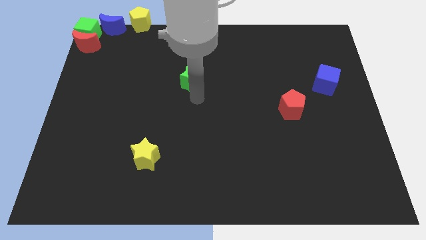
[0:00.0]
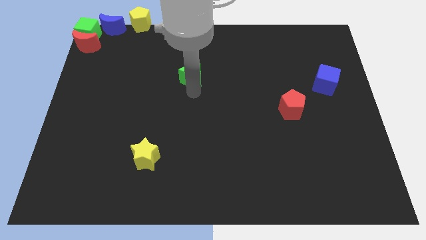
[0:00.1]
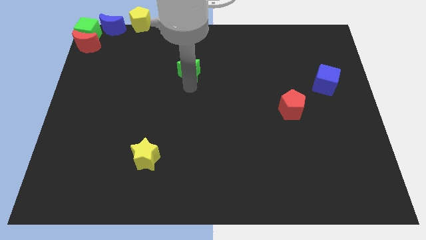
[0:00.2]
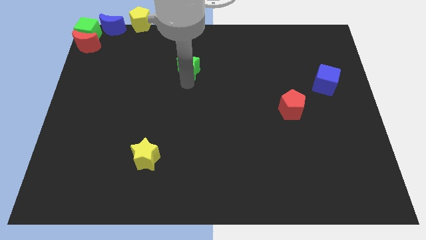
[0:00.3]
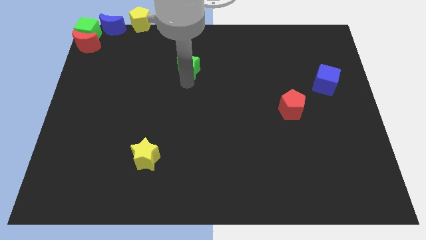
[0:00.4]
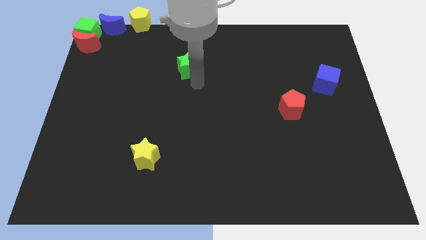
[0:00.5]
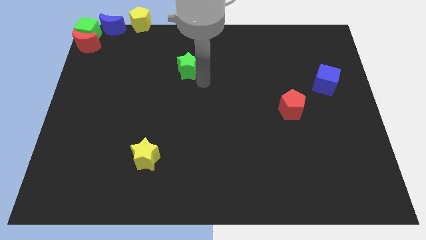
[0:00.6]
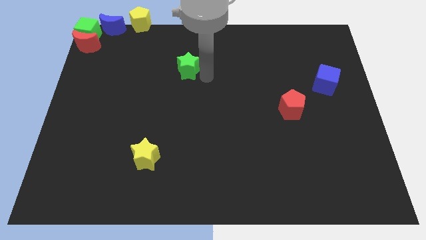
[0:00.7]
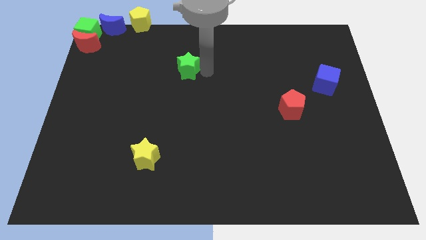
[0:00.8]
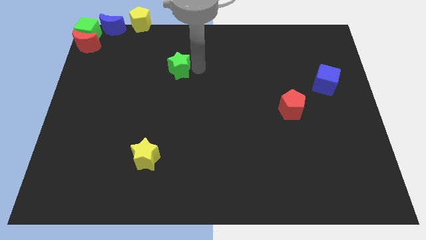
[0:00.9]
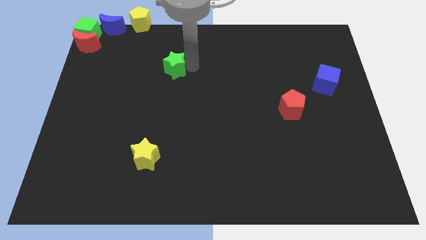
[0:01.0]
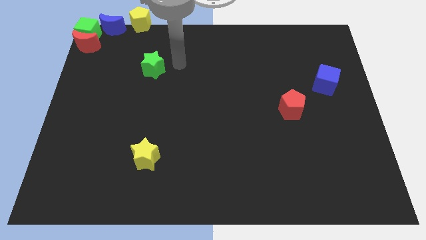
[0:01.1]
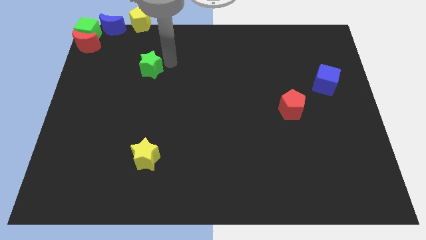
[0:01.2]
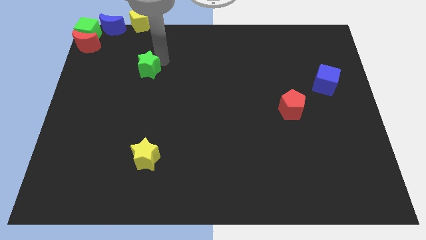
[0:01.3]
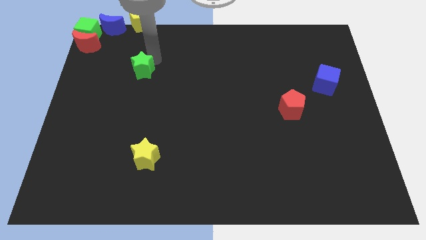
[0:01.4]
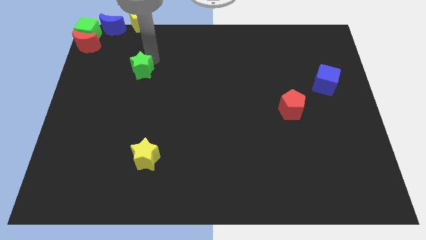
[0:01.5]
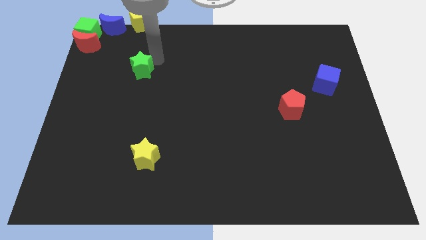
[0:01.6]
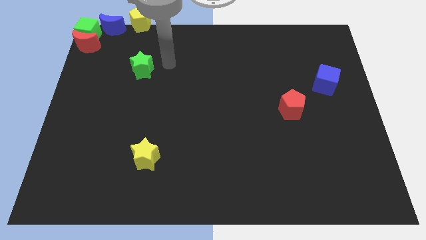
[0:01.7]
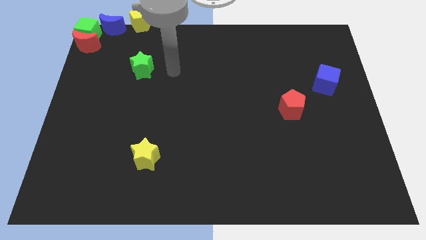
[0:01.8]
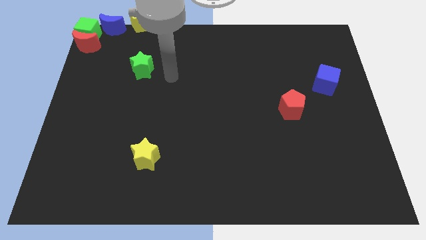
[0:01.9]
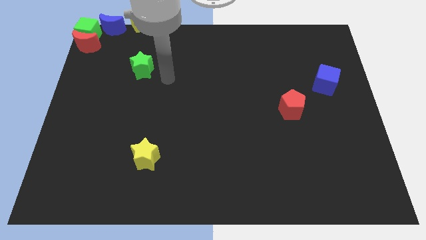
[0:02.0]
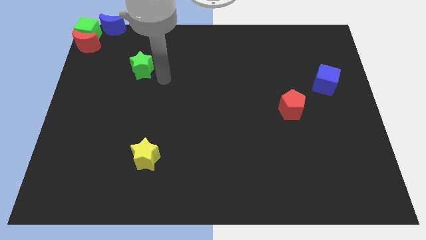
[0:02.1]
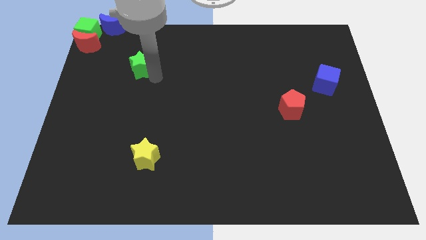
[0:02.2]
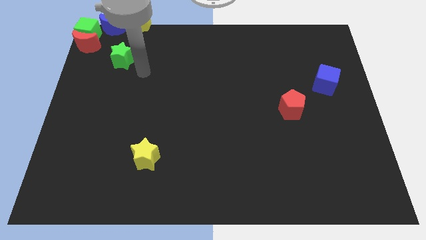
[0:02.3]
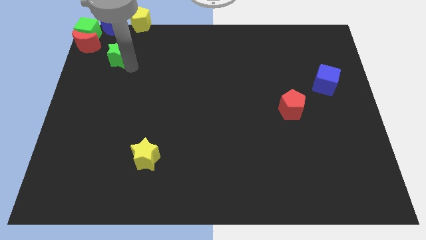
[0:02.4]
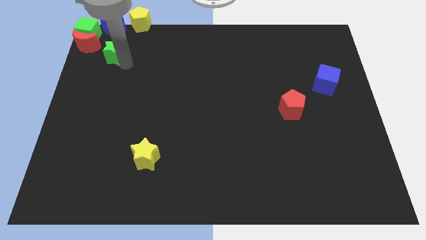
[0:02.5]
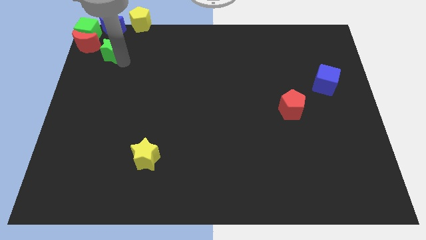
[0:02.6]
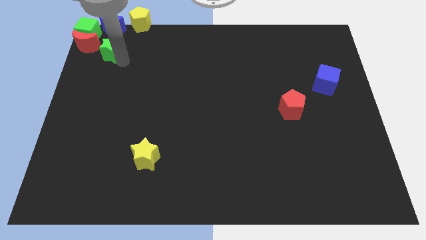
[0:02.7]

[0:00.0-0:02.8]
place green star below blue crescent

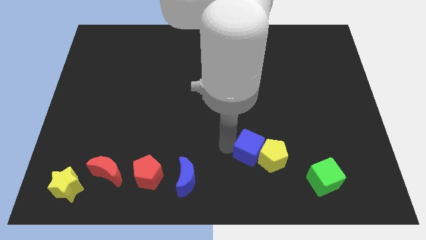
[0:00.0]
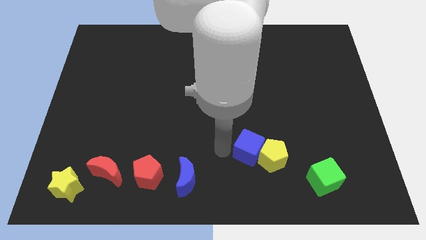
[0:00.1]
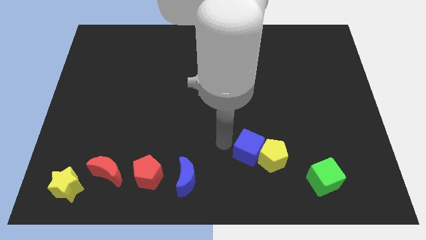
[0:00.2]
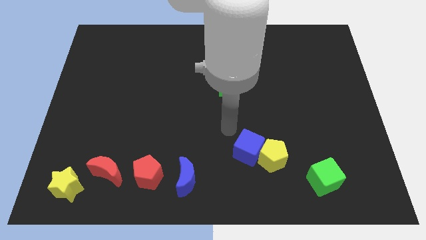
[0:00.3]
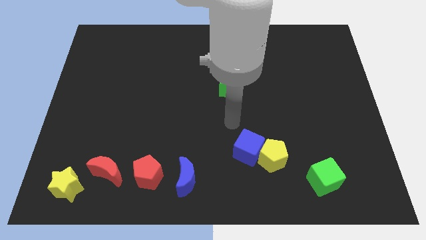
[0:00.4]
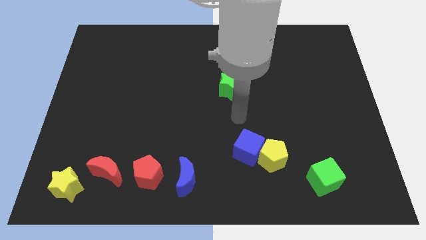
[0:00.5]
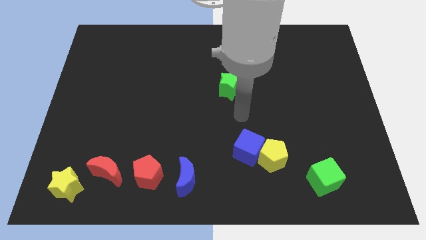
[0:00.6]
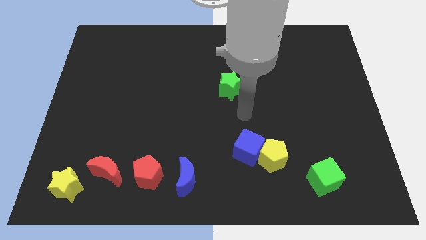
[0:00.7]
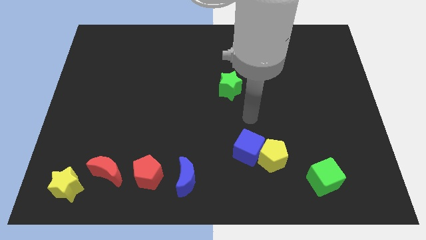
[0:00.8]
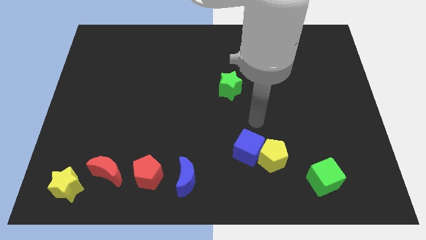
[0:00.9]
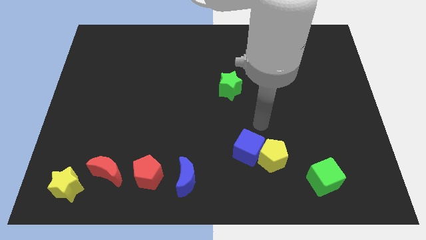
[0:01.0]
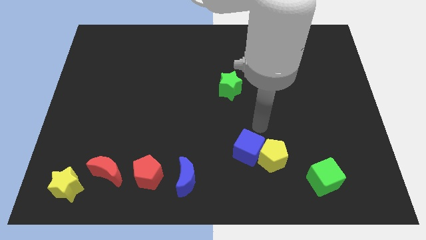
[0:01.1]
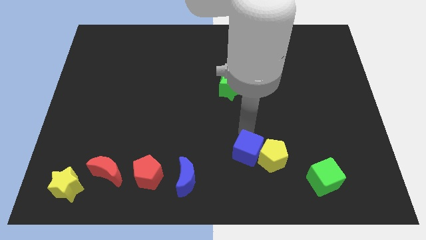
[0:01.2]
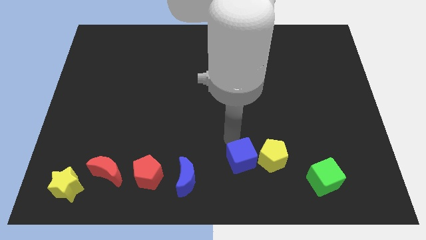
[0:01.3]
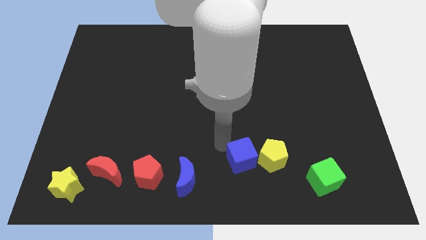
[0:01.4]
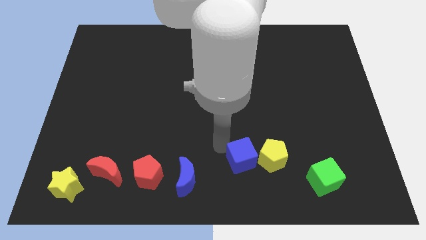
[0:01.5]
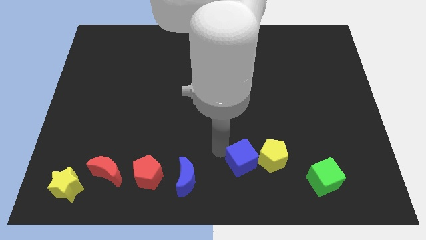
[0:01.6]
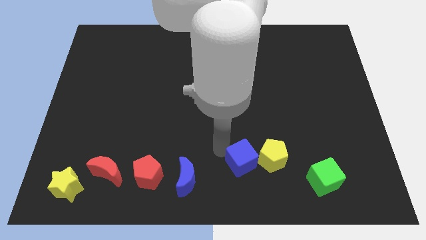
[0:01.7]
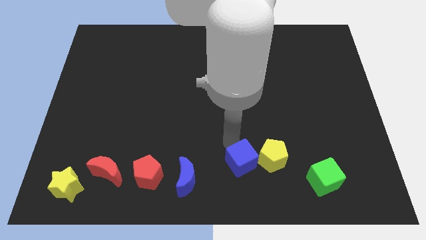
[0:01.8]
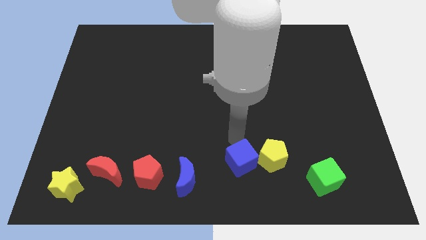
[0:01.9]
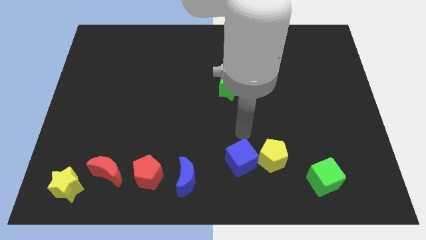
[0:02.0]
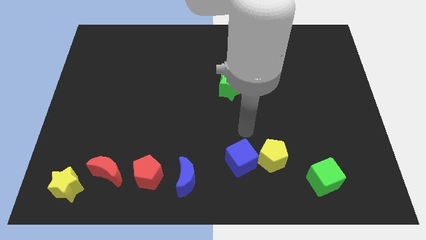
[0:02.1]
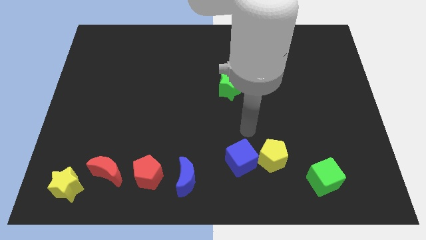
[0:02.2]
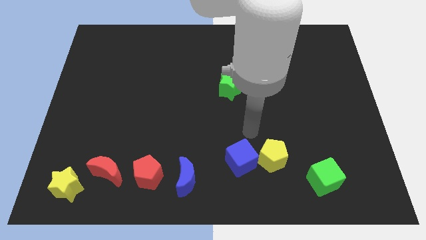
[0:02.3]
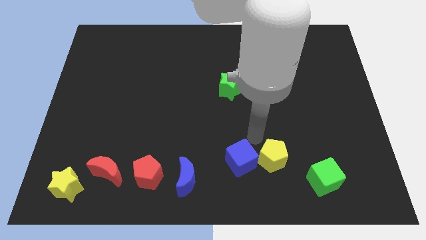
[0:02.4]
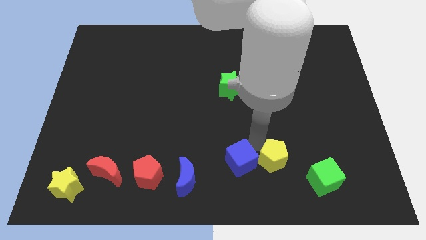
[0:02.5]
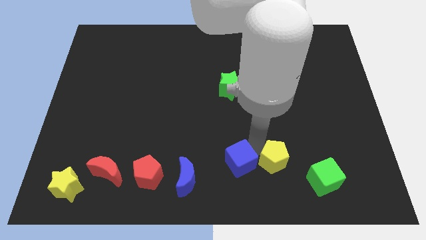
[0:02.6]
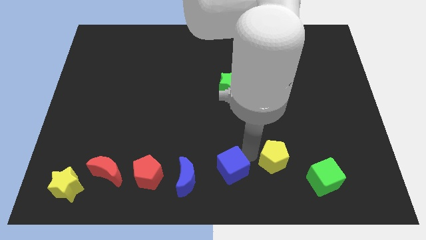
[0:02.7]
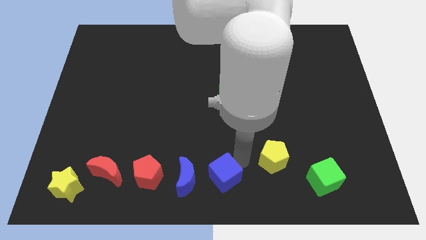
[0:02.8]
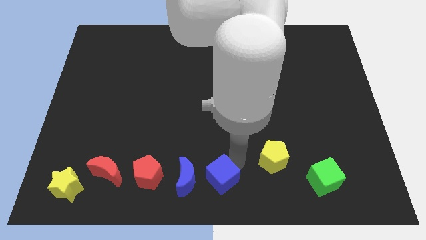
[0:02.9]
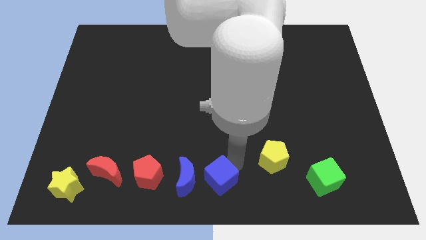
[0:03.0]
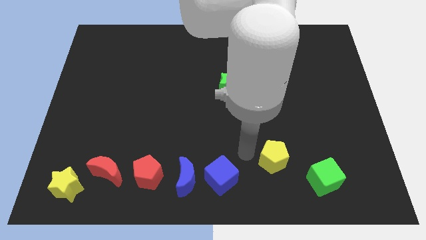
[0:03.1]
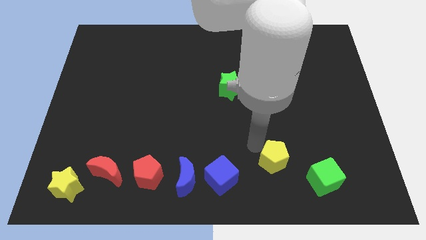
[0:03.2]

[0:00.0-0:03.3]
slide the blue cube to the right of blue crescent

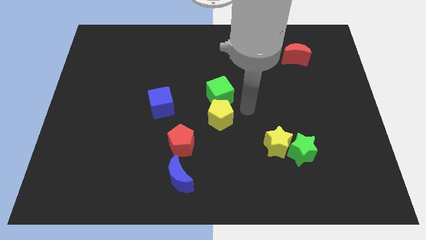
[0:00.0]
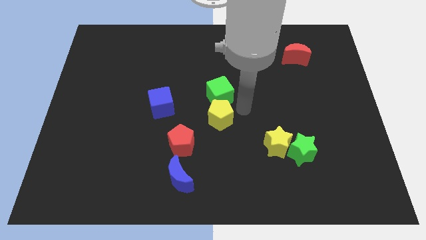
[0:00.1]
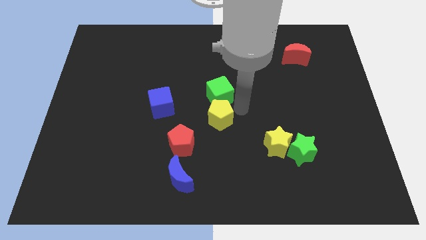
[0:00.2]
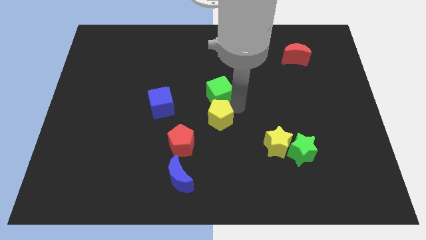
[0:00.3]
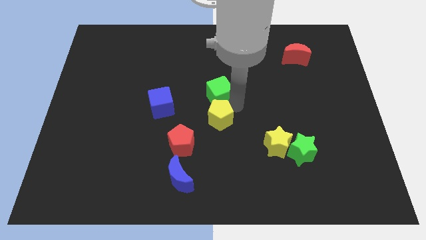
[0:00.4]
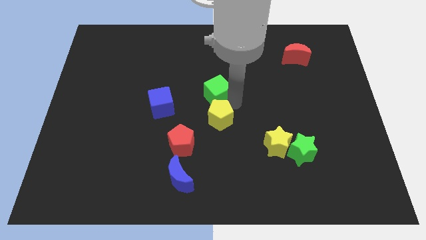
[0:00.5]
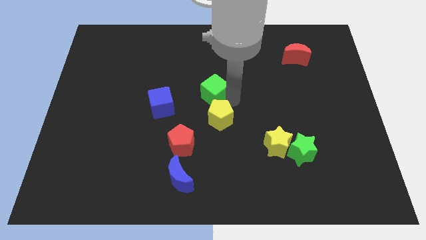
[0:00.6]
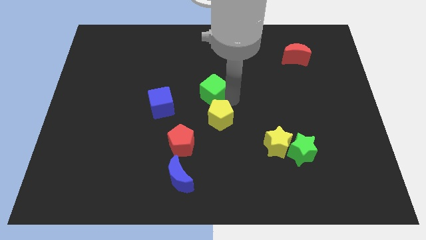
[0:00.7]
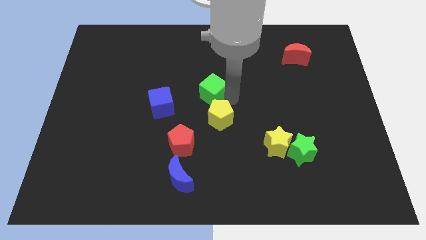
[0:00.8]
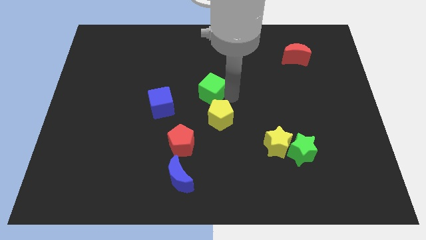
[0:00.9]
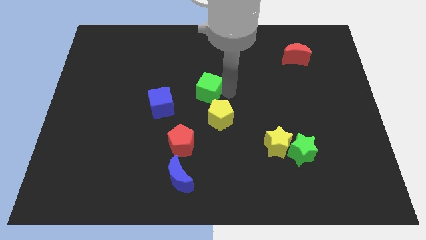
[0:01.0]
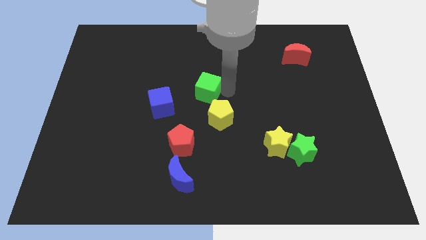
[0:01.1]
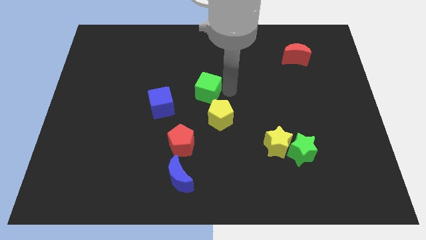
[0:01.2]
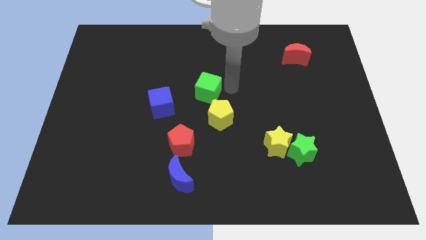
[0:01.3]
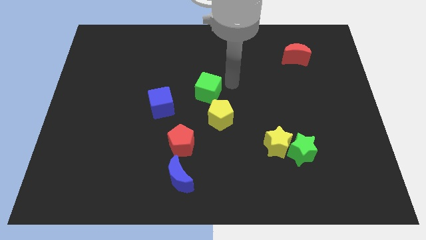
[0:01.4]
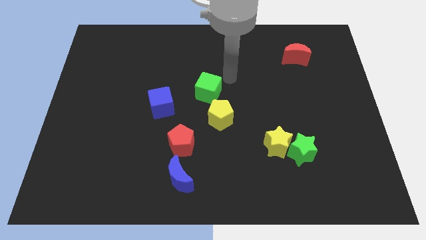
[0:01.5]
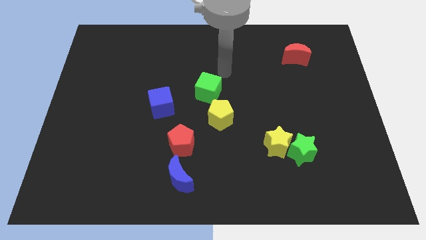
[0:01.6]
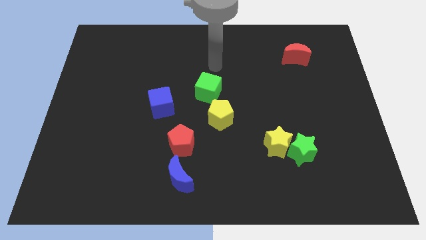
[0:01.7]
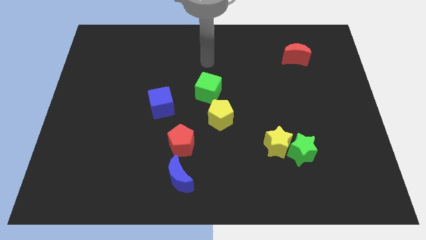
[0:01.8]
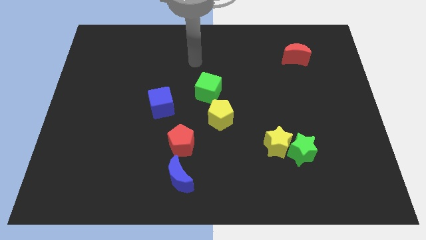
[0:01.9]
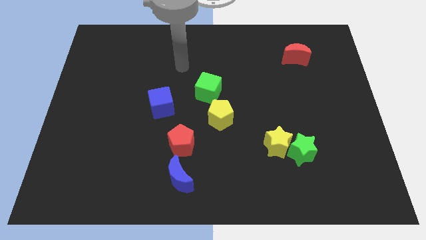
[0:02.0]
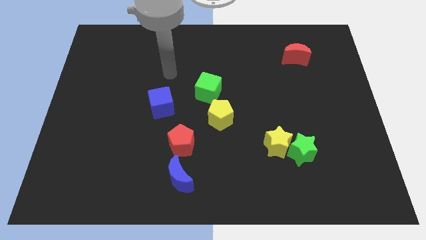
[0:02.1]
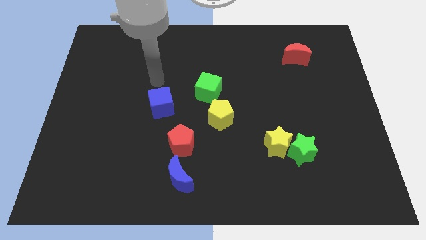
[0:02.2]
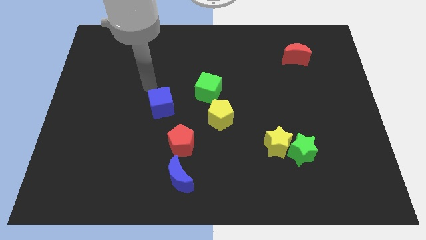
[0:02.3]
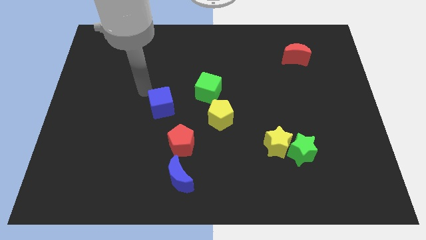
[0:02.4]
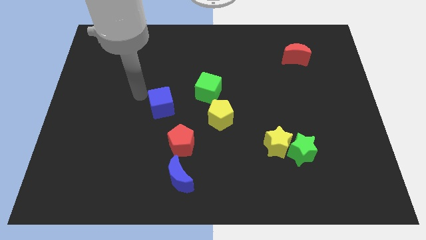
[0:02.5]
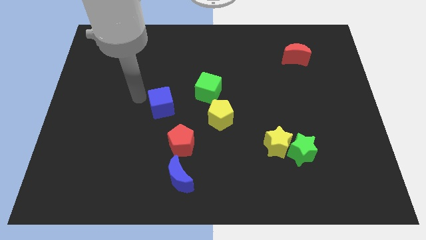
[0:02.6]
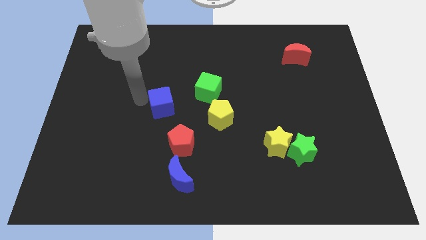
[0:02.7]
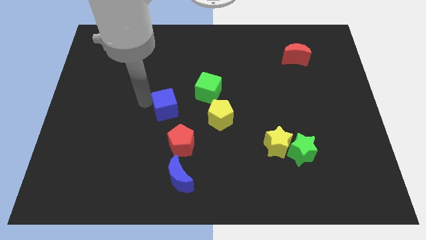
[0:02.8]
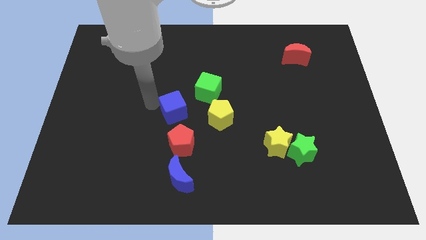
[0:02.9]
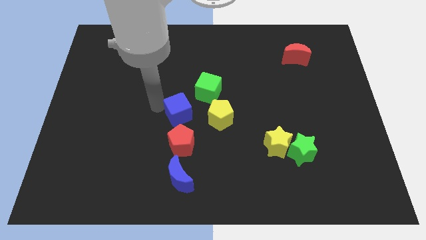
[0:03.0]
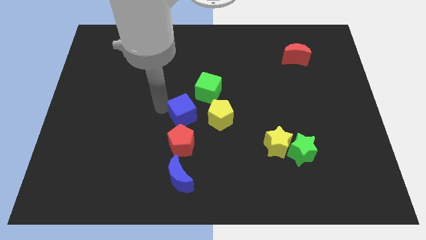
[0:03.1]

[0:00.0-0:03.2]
adjust the blue cube to form a triangle
